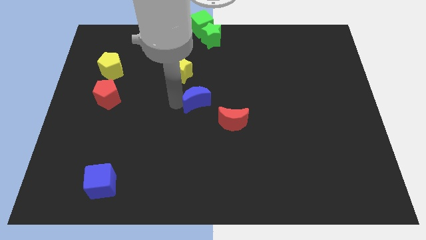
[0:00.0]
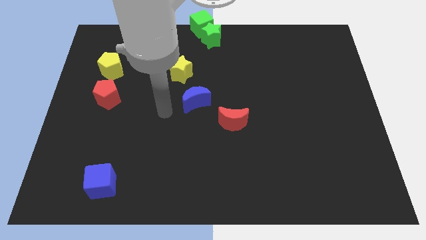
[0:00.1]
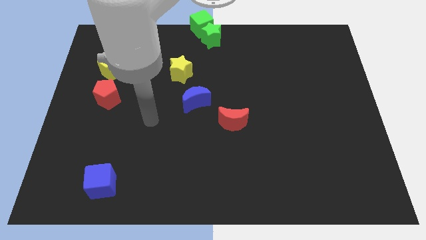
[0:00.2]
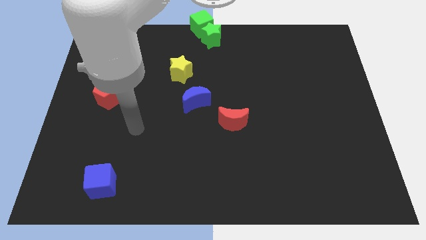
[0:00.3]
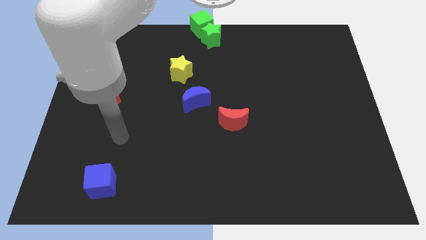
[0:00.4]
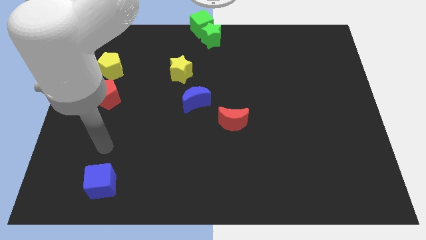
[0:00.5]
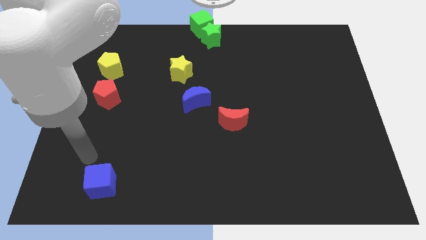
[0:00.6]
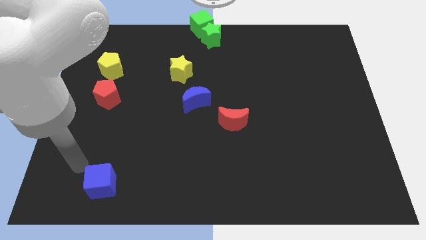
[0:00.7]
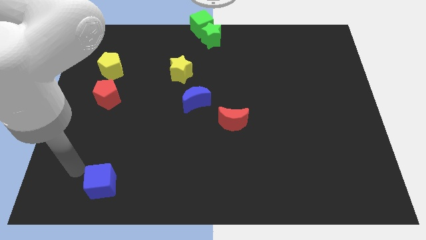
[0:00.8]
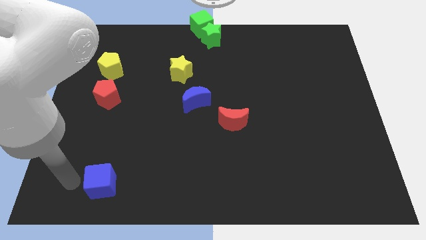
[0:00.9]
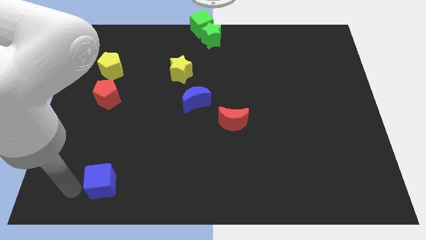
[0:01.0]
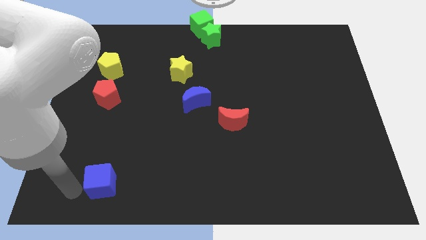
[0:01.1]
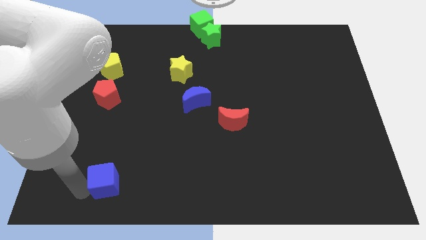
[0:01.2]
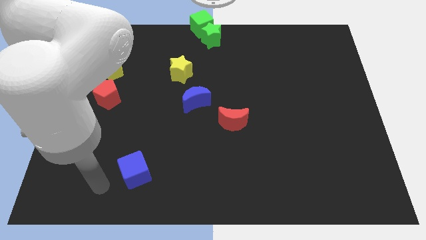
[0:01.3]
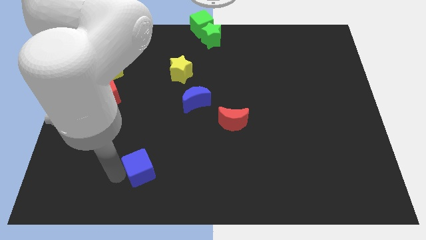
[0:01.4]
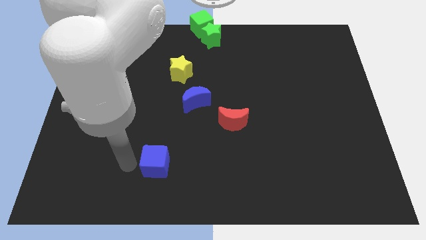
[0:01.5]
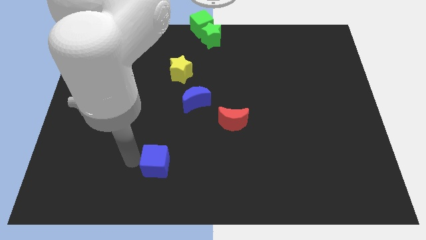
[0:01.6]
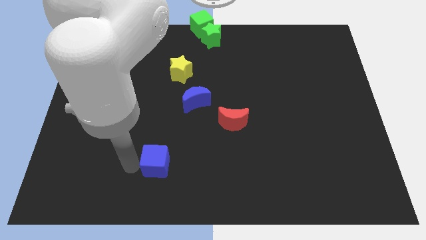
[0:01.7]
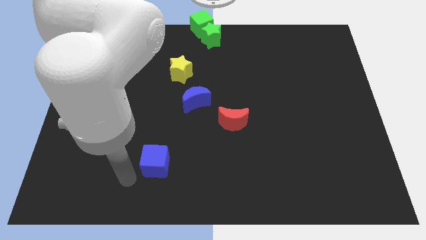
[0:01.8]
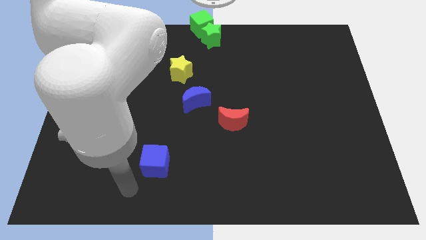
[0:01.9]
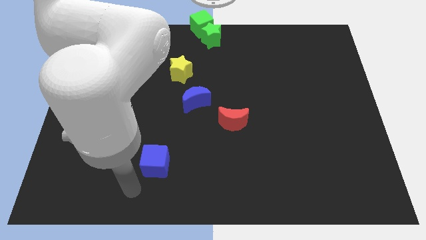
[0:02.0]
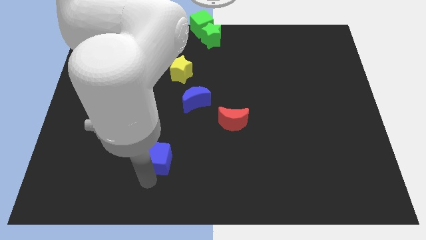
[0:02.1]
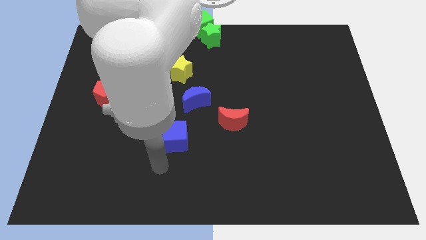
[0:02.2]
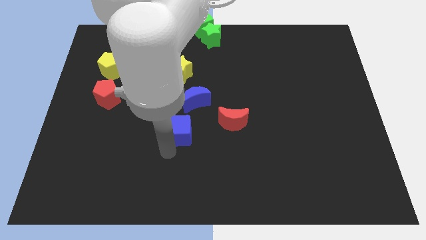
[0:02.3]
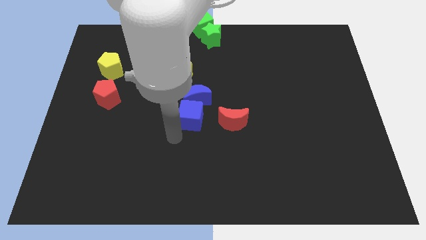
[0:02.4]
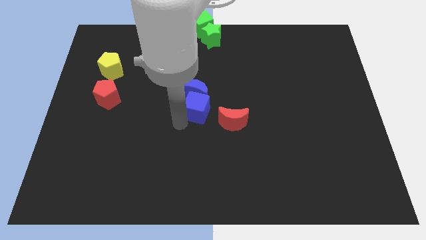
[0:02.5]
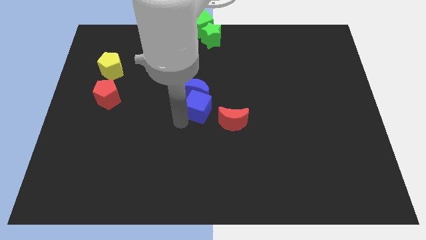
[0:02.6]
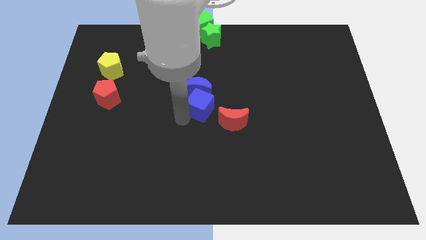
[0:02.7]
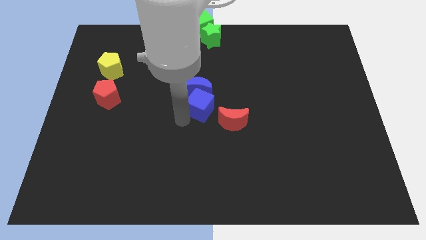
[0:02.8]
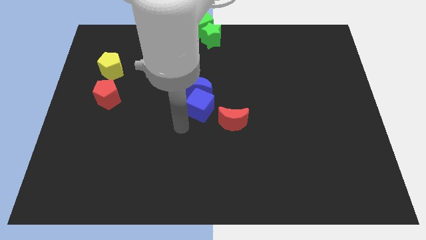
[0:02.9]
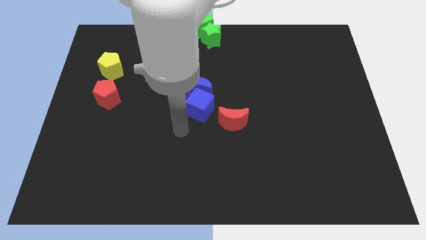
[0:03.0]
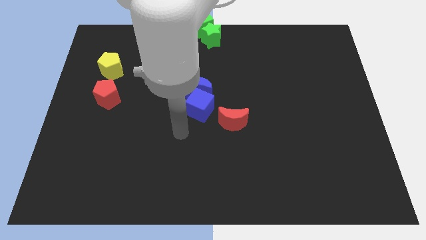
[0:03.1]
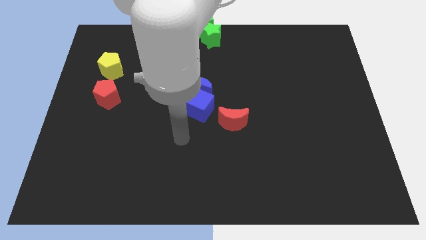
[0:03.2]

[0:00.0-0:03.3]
push the blue cube into the blue moon

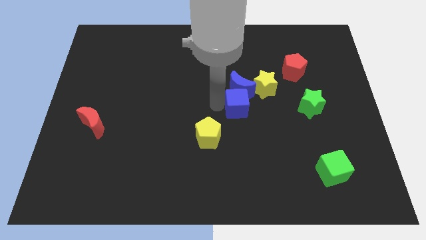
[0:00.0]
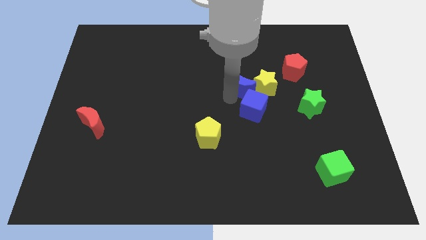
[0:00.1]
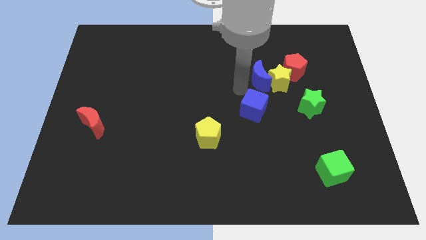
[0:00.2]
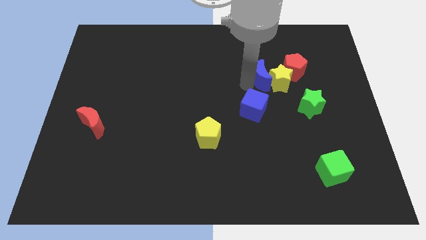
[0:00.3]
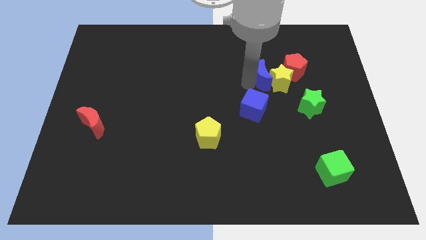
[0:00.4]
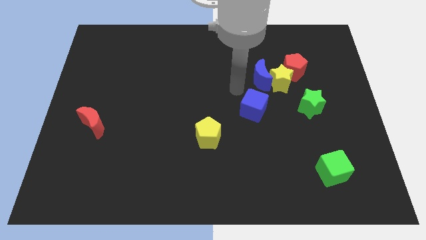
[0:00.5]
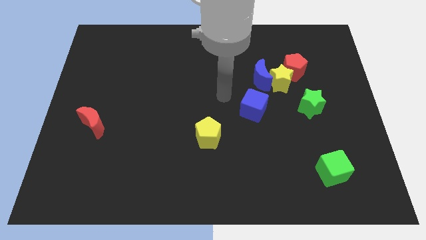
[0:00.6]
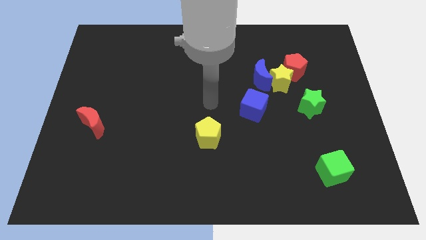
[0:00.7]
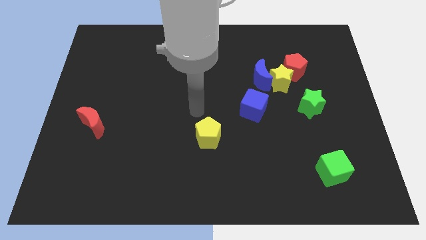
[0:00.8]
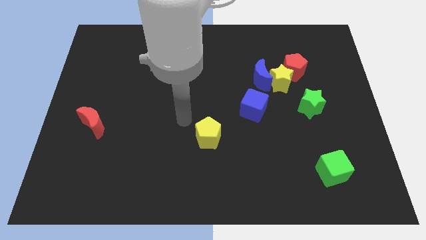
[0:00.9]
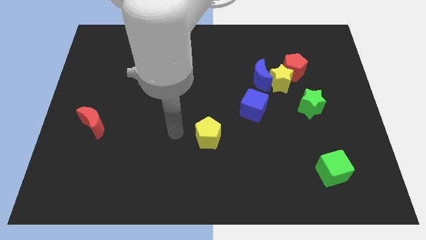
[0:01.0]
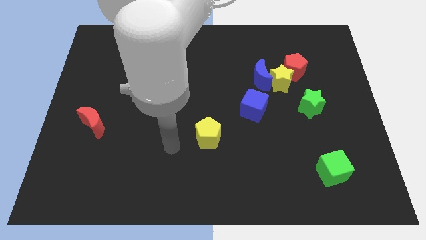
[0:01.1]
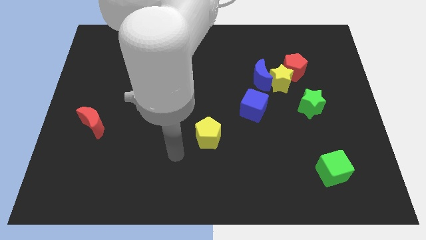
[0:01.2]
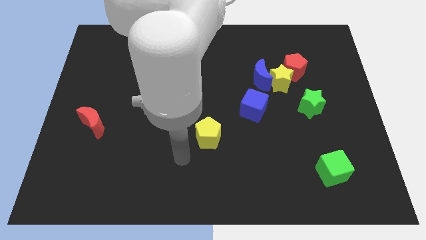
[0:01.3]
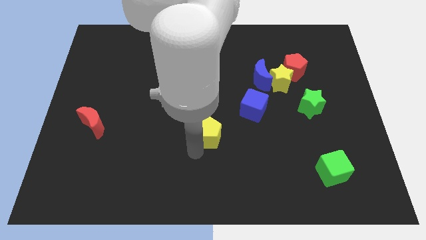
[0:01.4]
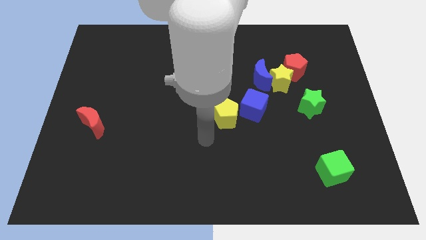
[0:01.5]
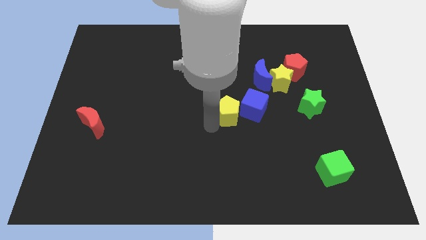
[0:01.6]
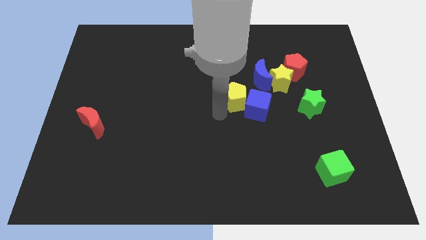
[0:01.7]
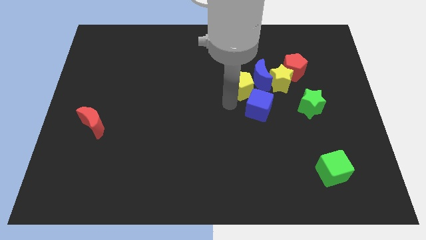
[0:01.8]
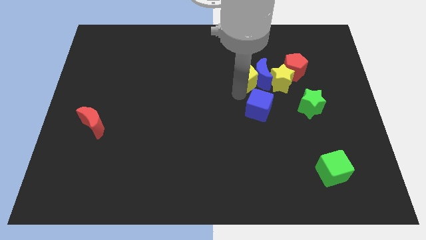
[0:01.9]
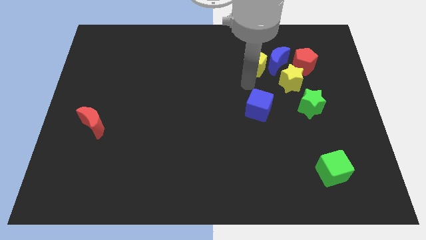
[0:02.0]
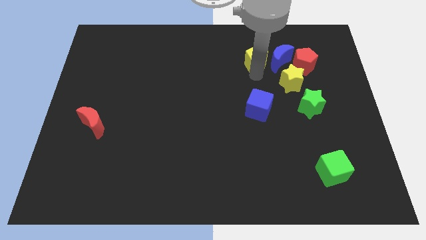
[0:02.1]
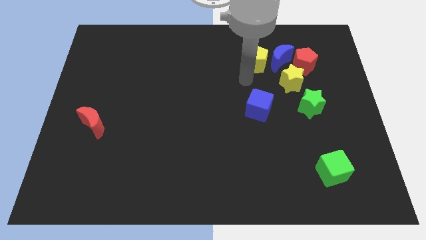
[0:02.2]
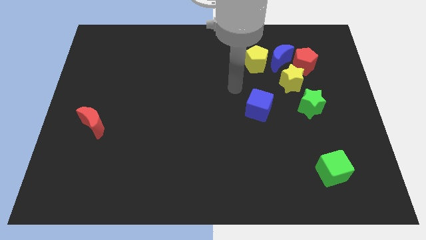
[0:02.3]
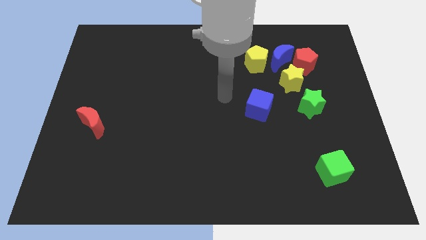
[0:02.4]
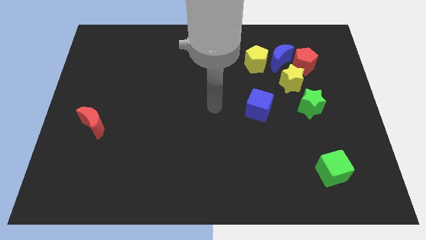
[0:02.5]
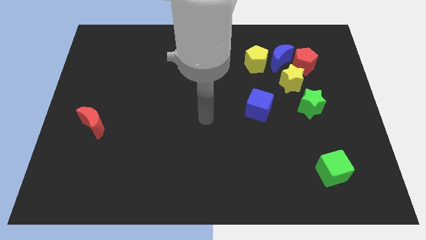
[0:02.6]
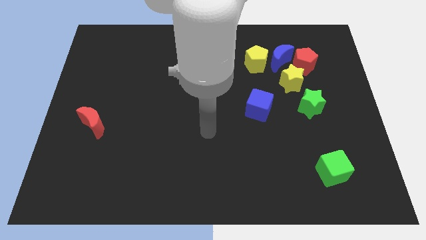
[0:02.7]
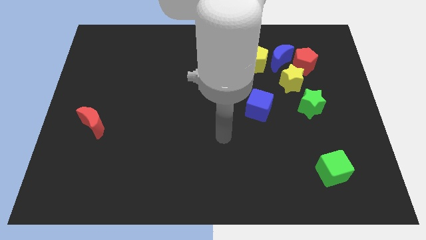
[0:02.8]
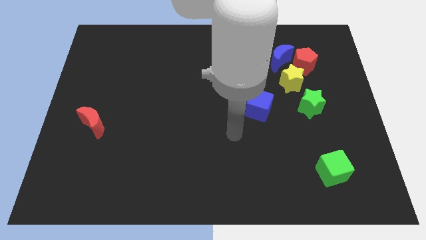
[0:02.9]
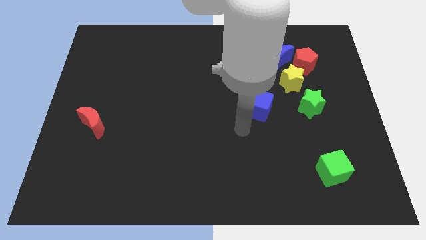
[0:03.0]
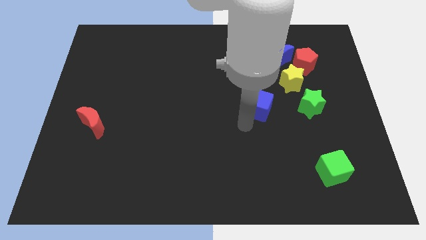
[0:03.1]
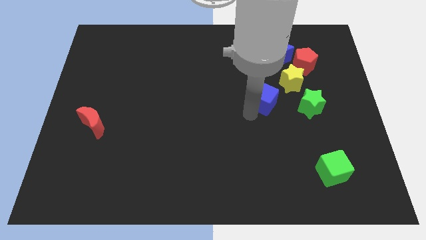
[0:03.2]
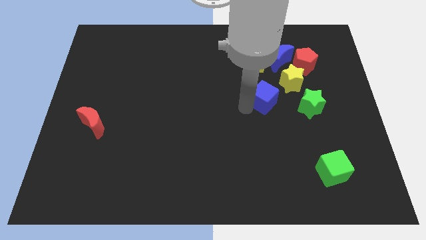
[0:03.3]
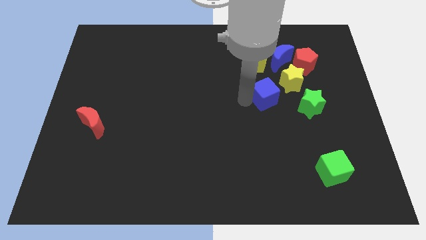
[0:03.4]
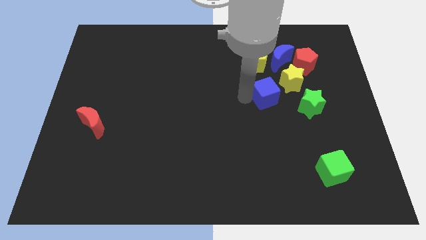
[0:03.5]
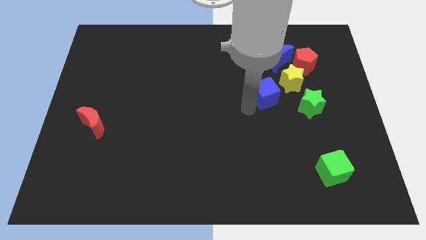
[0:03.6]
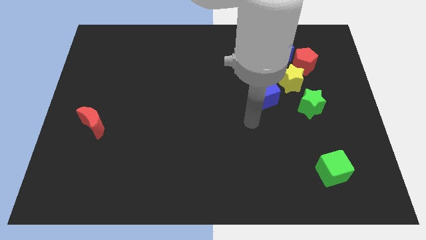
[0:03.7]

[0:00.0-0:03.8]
push the yellow pentagon into the blue moon

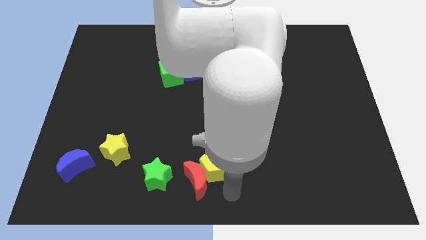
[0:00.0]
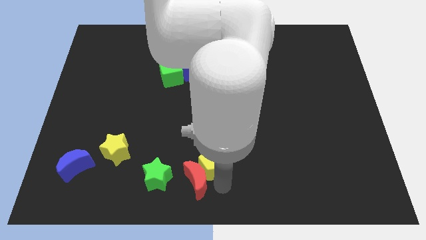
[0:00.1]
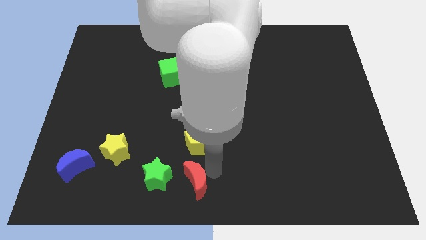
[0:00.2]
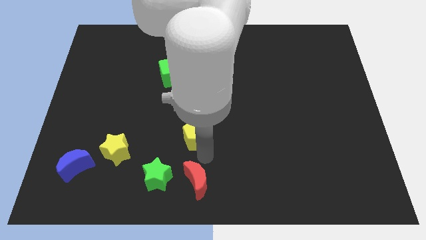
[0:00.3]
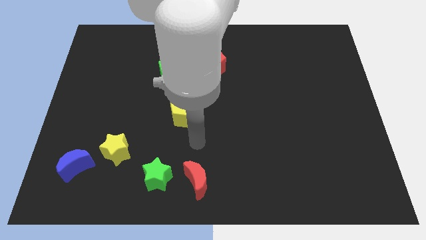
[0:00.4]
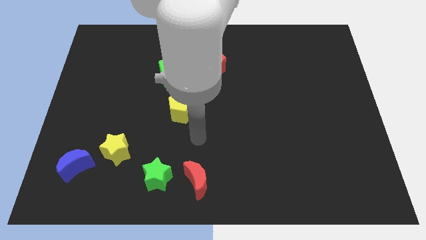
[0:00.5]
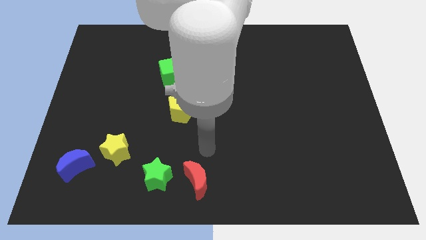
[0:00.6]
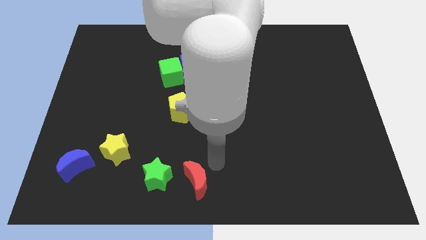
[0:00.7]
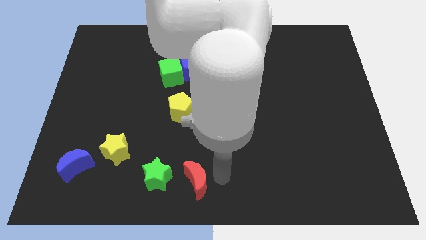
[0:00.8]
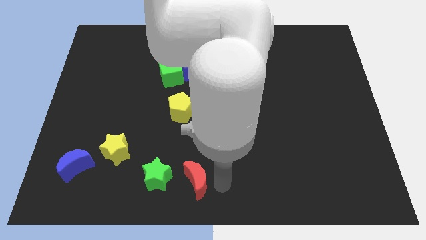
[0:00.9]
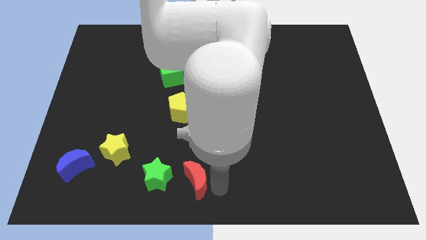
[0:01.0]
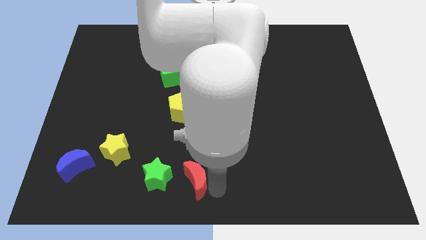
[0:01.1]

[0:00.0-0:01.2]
drag the yellow pentagon away from the red moon

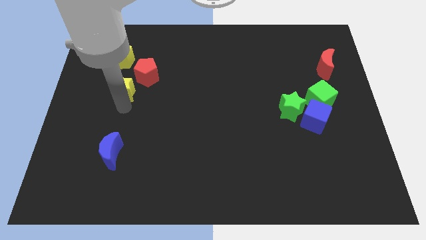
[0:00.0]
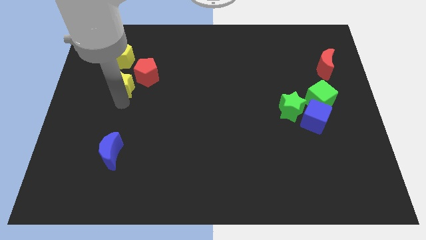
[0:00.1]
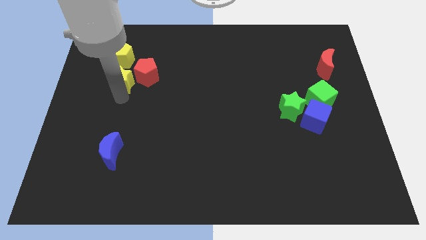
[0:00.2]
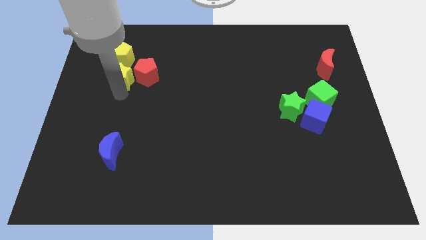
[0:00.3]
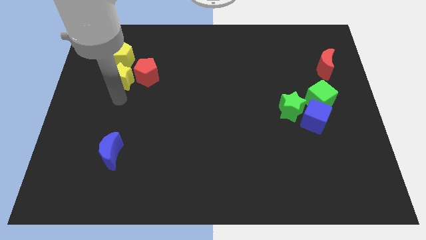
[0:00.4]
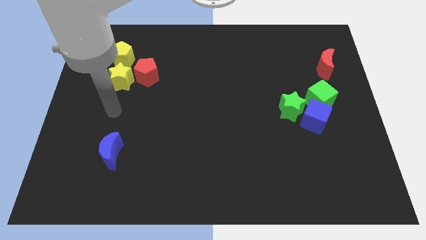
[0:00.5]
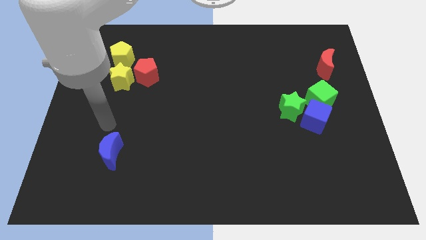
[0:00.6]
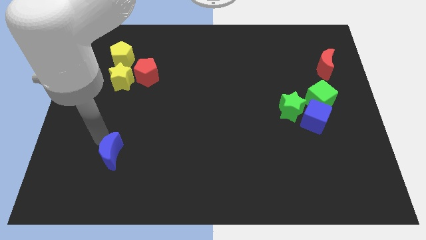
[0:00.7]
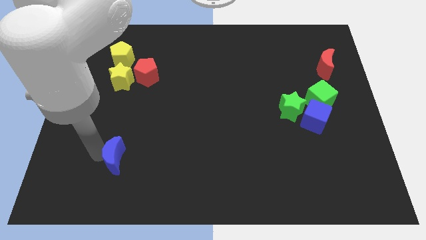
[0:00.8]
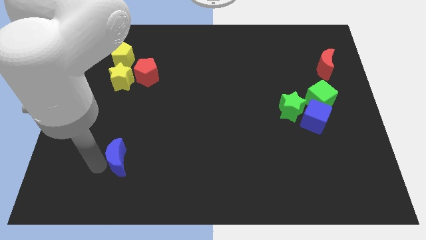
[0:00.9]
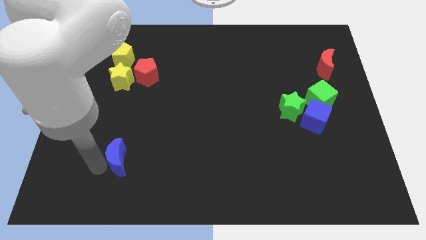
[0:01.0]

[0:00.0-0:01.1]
move the yellow star into the yellow pentagon
